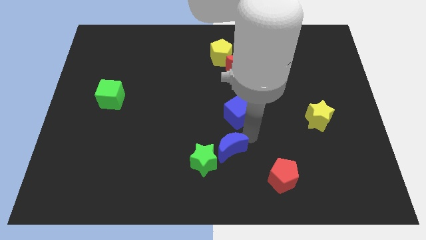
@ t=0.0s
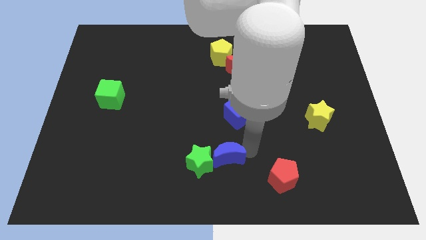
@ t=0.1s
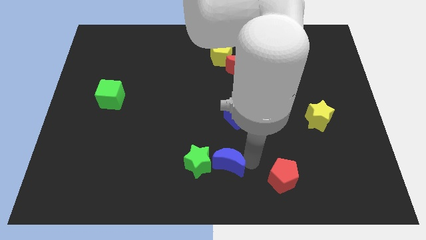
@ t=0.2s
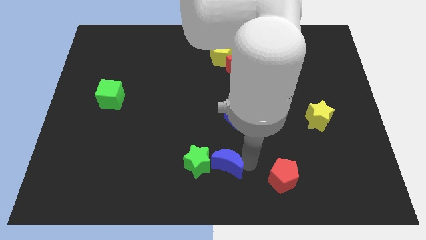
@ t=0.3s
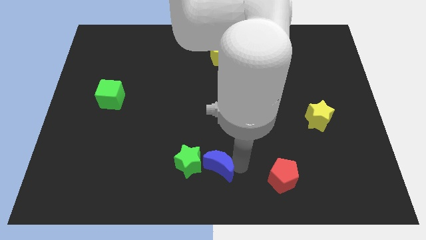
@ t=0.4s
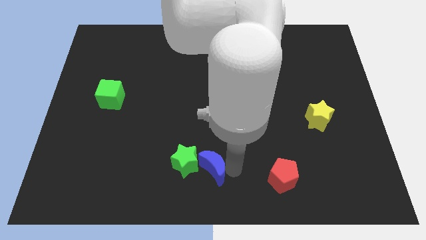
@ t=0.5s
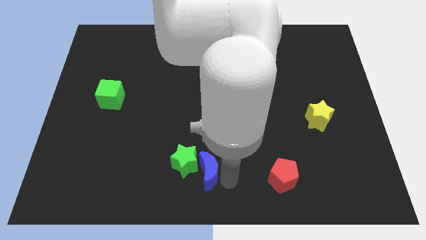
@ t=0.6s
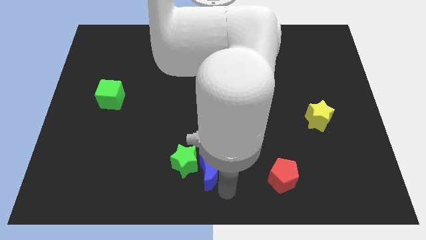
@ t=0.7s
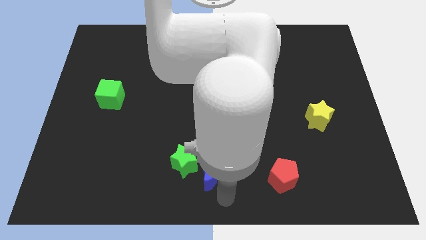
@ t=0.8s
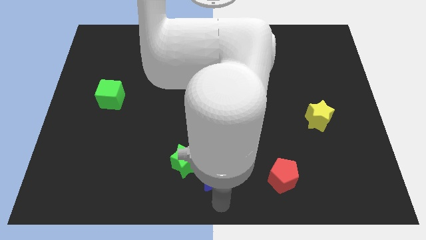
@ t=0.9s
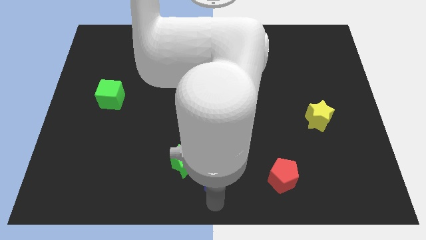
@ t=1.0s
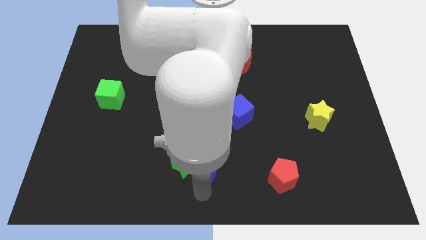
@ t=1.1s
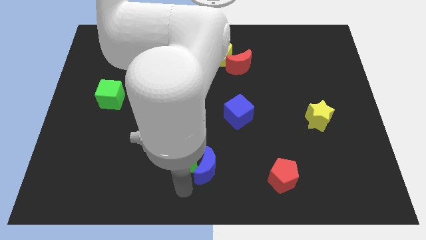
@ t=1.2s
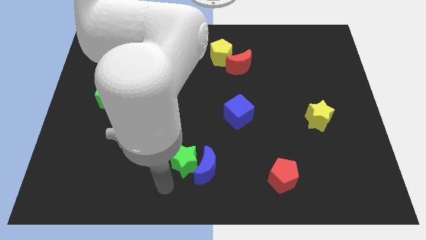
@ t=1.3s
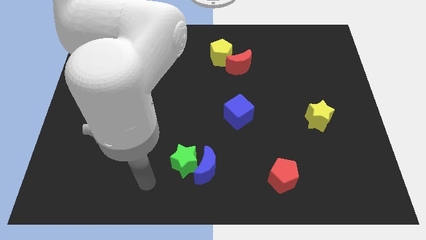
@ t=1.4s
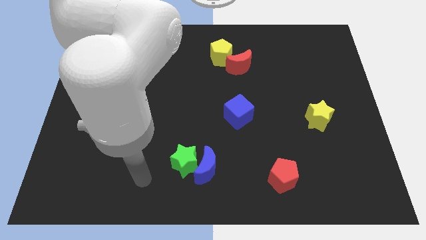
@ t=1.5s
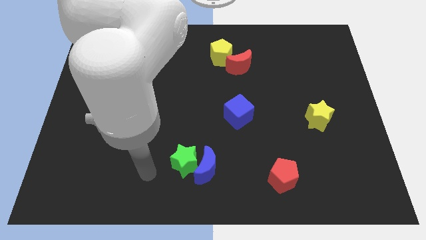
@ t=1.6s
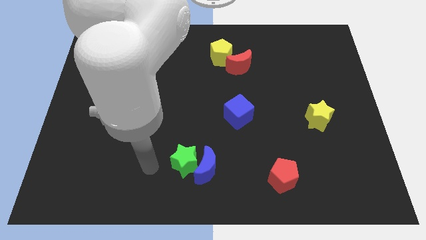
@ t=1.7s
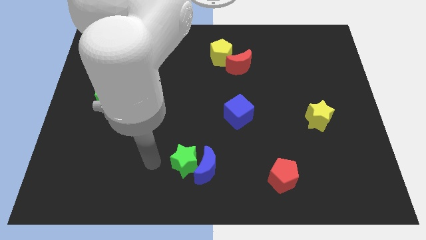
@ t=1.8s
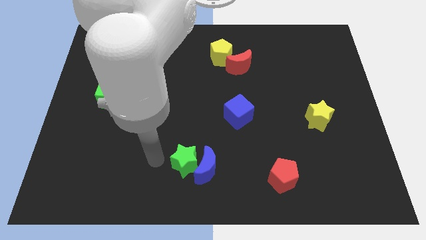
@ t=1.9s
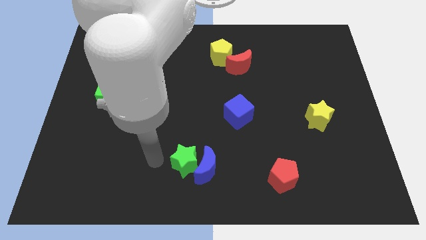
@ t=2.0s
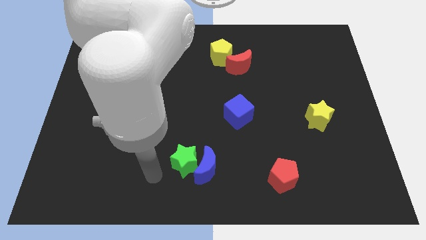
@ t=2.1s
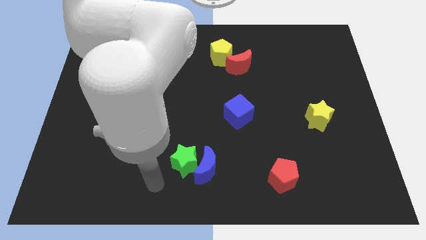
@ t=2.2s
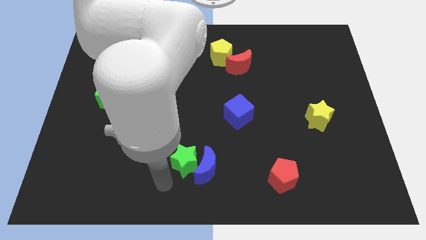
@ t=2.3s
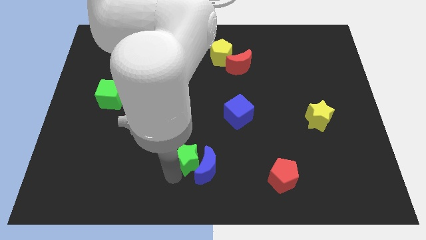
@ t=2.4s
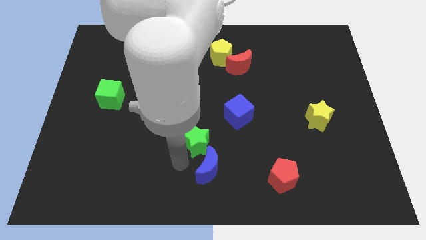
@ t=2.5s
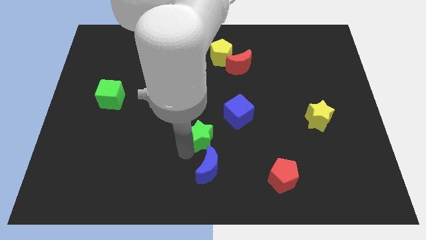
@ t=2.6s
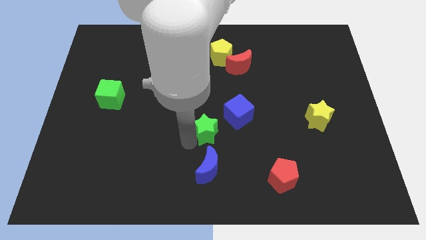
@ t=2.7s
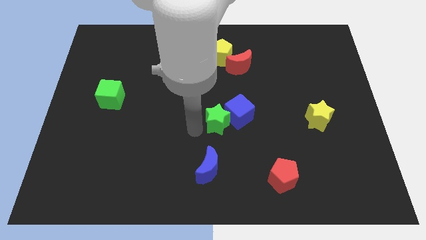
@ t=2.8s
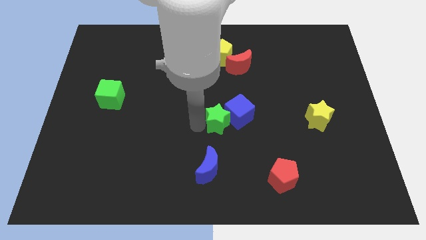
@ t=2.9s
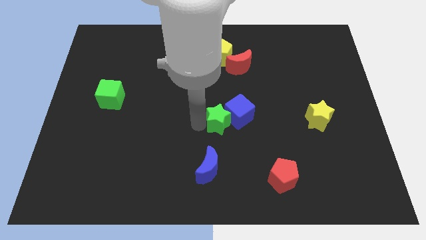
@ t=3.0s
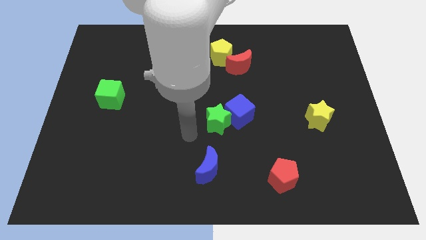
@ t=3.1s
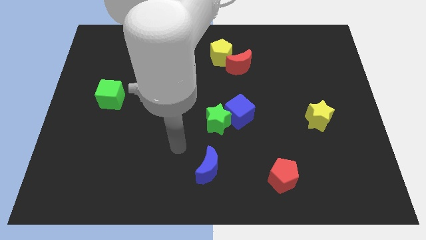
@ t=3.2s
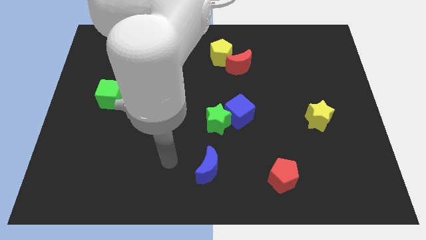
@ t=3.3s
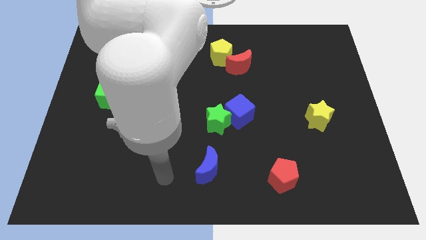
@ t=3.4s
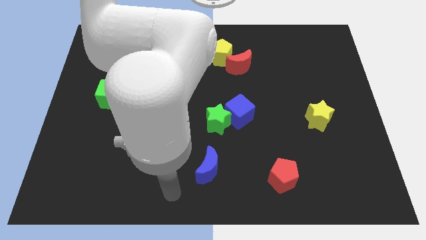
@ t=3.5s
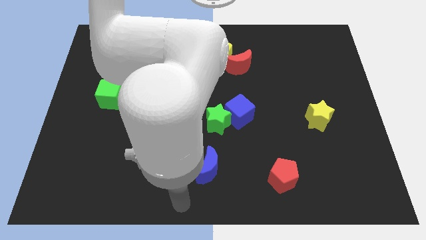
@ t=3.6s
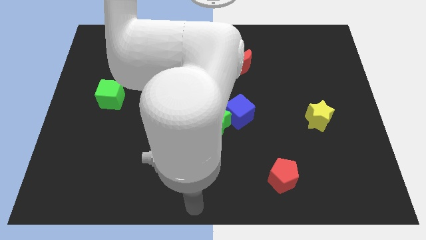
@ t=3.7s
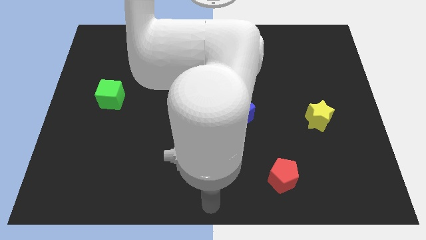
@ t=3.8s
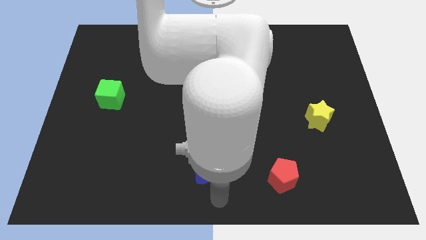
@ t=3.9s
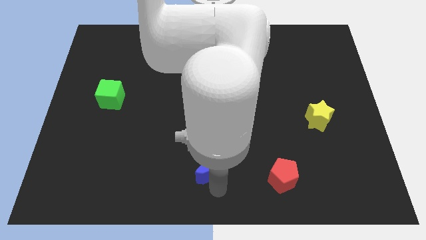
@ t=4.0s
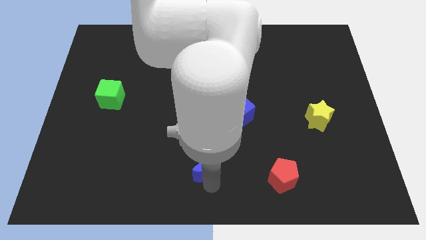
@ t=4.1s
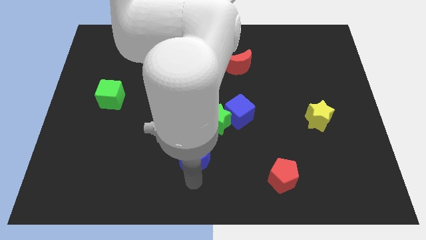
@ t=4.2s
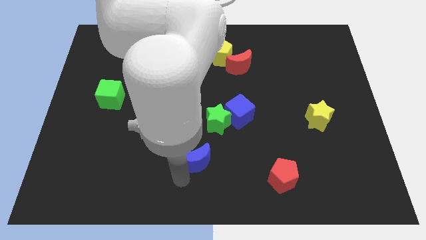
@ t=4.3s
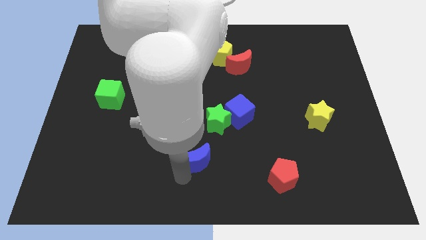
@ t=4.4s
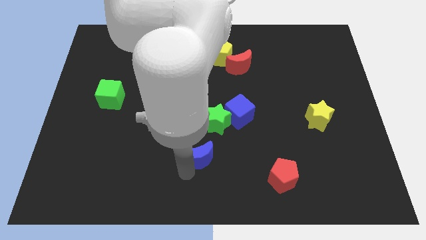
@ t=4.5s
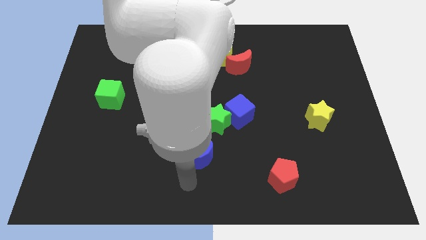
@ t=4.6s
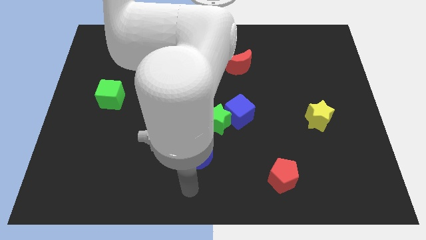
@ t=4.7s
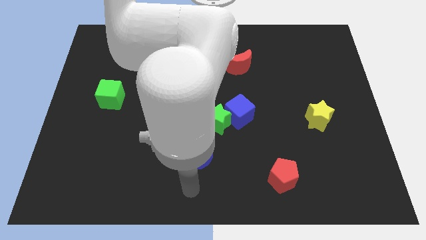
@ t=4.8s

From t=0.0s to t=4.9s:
push the blue moon and green star towards the center of the board

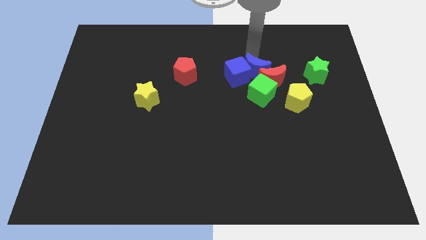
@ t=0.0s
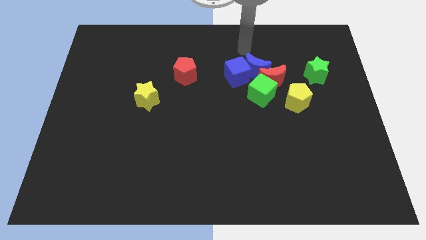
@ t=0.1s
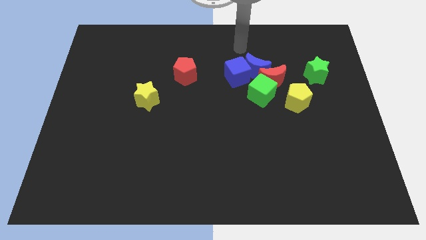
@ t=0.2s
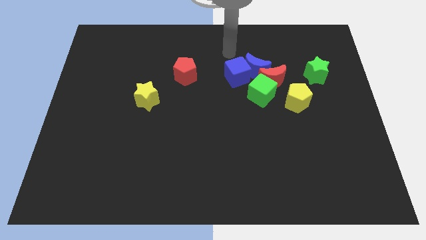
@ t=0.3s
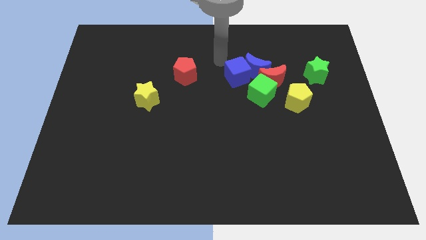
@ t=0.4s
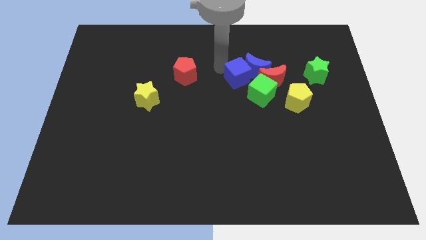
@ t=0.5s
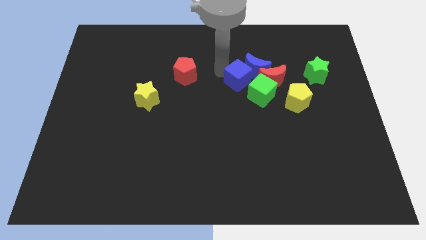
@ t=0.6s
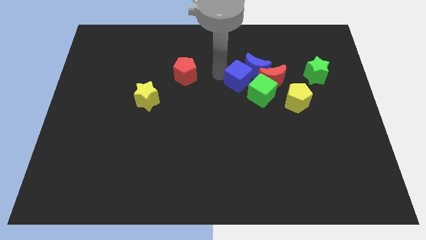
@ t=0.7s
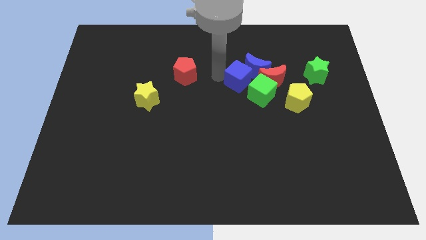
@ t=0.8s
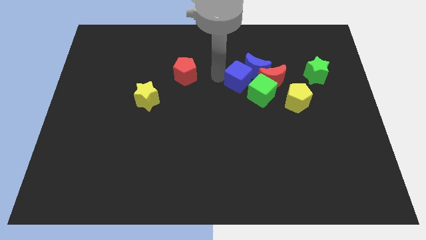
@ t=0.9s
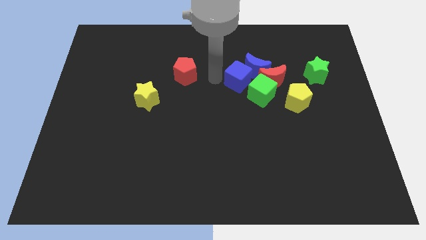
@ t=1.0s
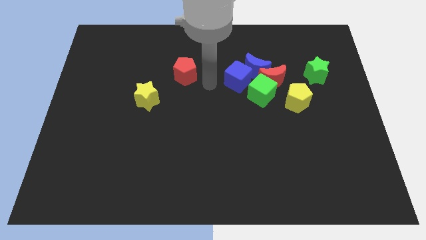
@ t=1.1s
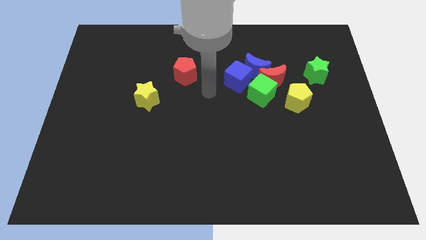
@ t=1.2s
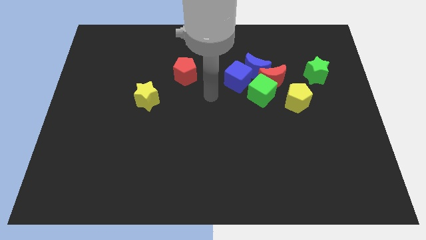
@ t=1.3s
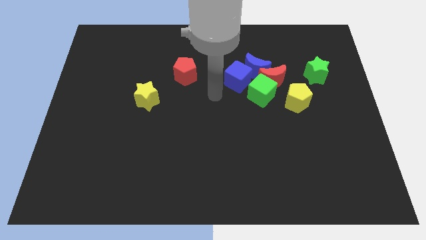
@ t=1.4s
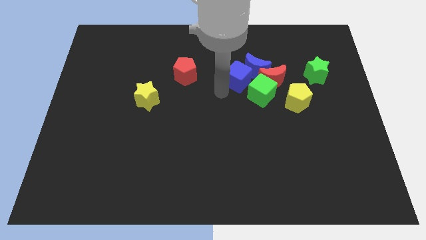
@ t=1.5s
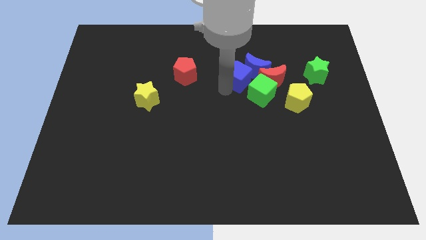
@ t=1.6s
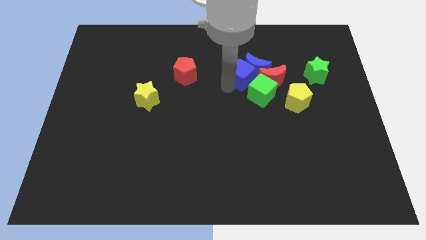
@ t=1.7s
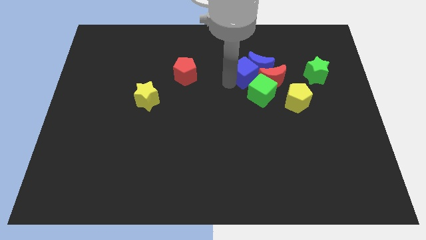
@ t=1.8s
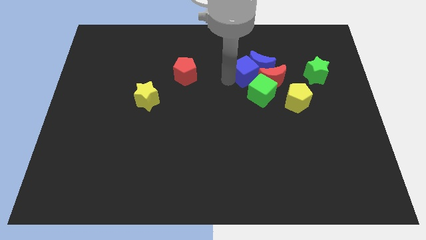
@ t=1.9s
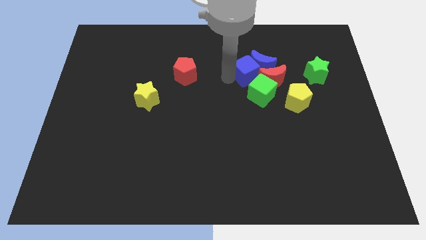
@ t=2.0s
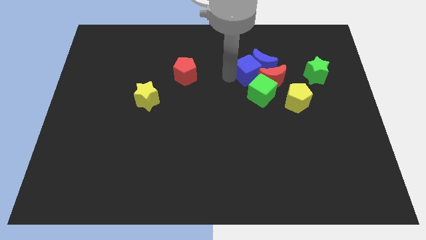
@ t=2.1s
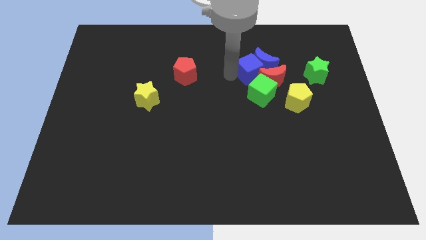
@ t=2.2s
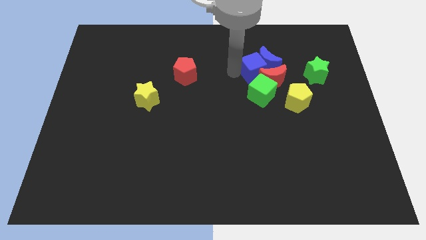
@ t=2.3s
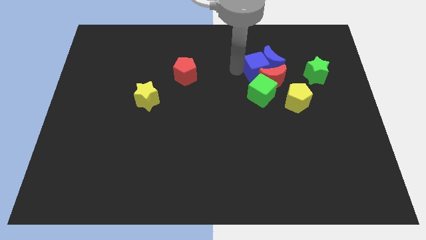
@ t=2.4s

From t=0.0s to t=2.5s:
push the blue cube into the blue moon

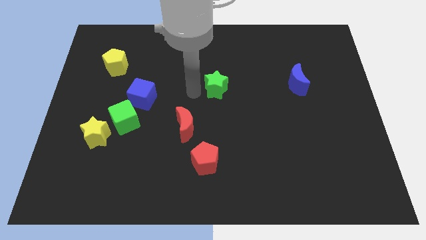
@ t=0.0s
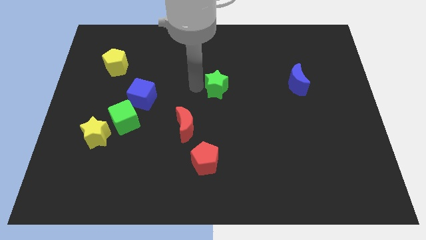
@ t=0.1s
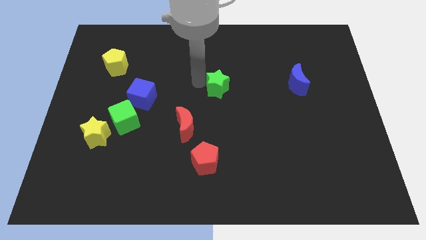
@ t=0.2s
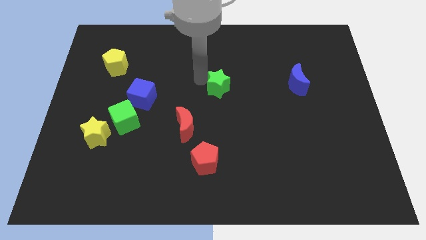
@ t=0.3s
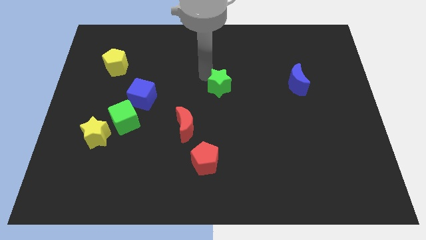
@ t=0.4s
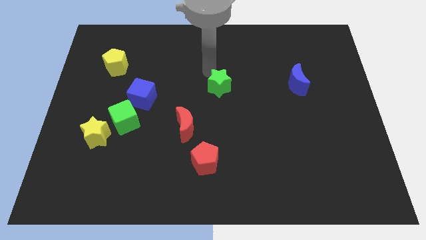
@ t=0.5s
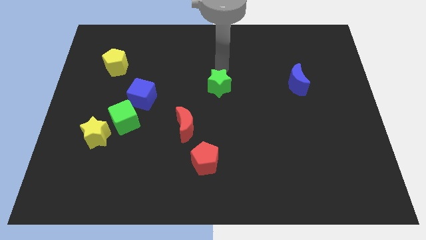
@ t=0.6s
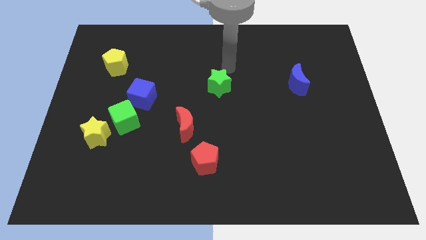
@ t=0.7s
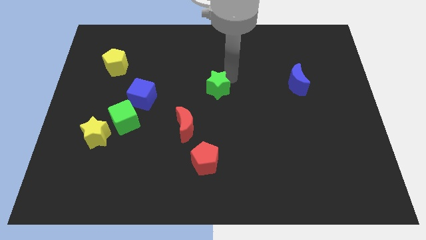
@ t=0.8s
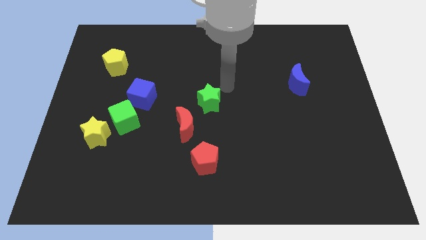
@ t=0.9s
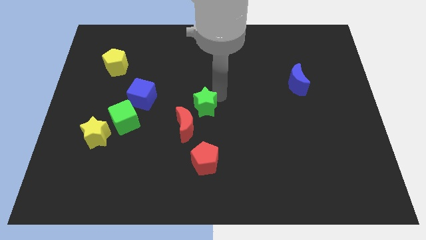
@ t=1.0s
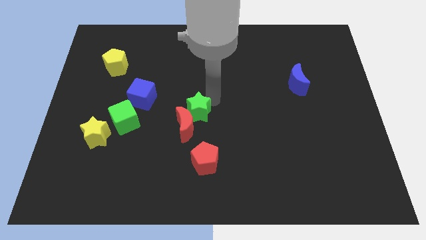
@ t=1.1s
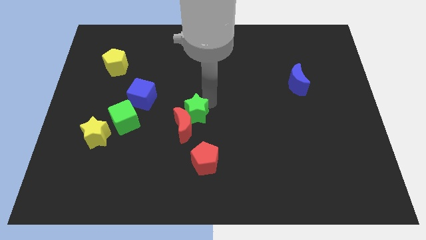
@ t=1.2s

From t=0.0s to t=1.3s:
push the green star into the right side of the red crescent

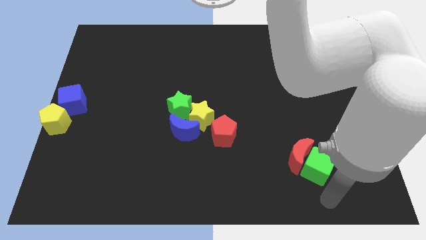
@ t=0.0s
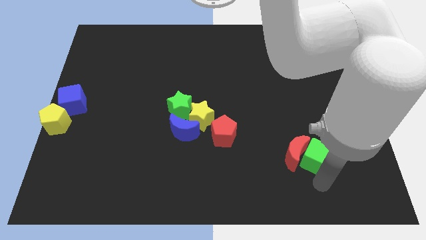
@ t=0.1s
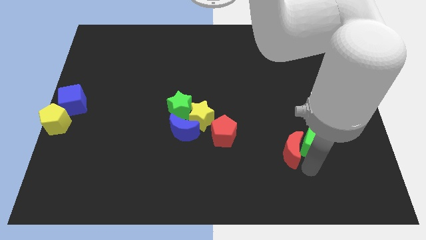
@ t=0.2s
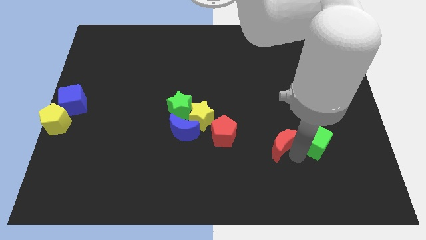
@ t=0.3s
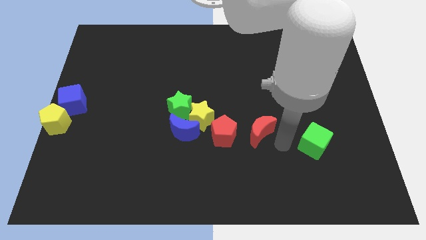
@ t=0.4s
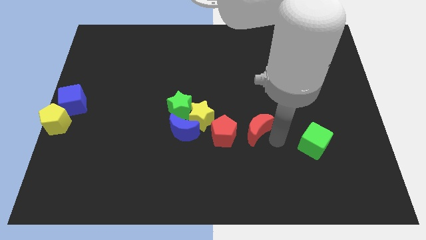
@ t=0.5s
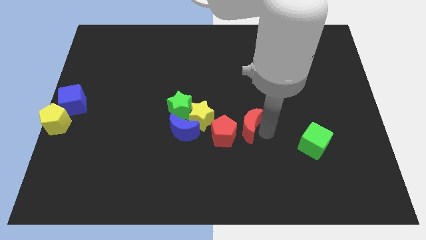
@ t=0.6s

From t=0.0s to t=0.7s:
separate the red crescent and green cube
